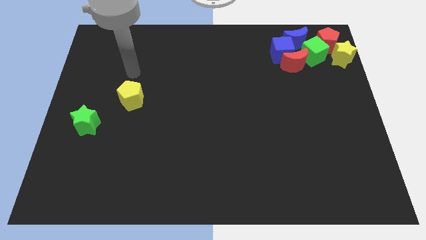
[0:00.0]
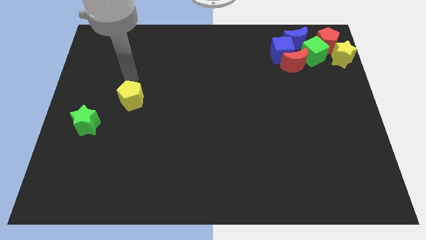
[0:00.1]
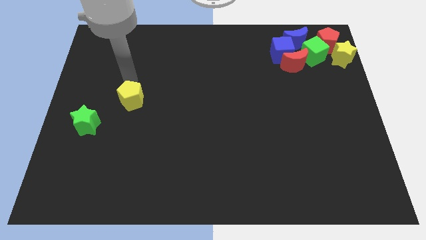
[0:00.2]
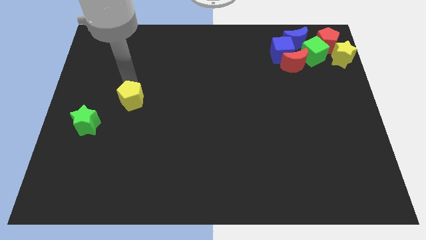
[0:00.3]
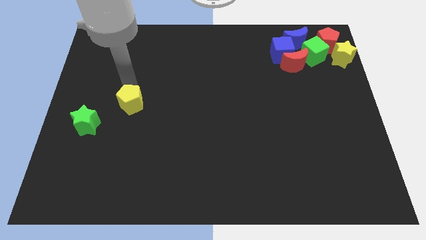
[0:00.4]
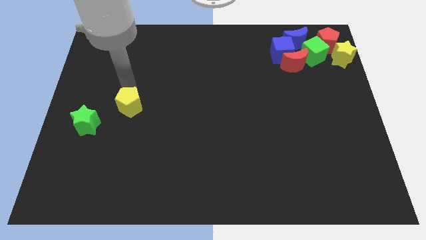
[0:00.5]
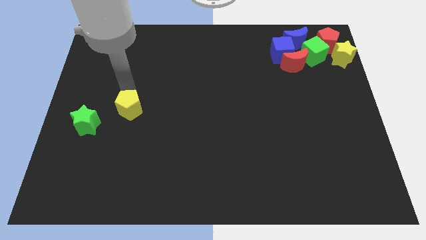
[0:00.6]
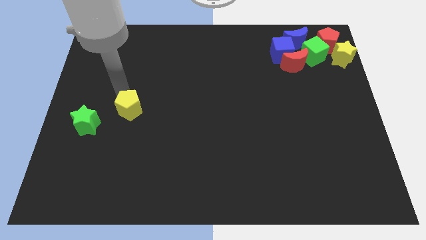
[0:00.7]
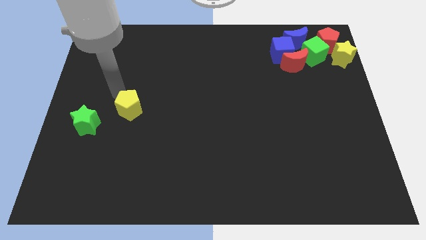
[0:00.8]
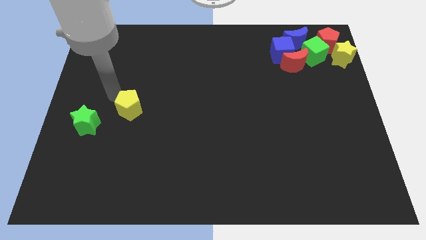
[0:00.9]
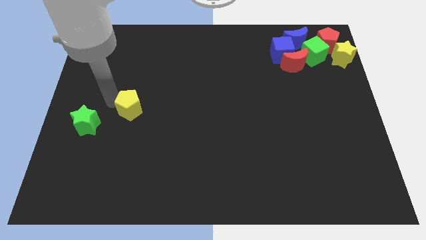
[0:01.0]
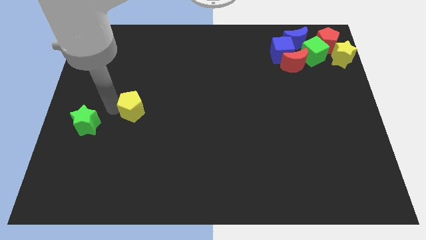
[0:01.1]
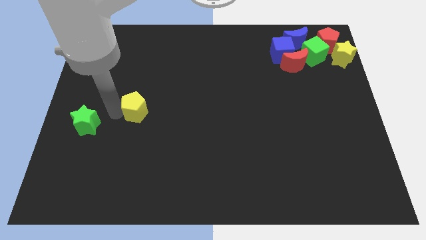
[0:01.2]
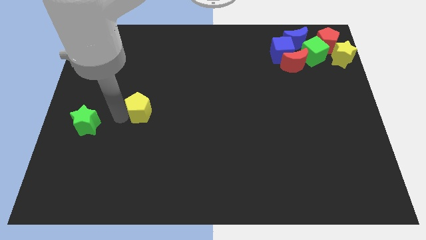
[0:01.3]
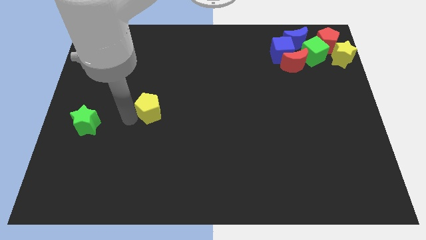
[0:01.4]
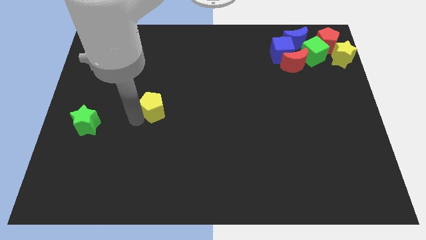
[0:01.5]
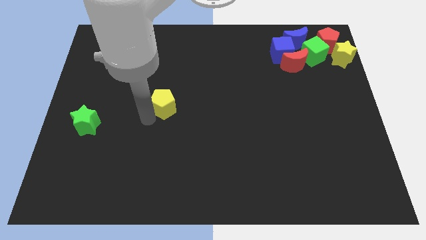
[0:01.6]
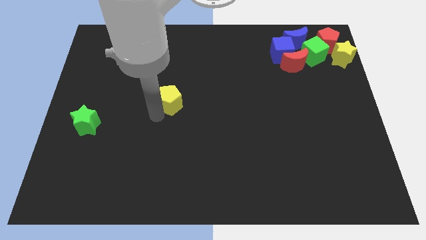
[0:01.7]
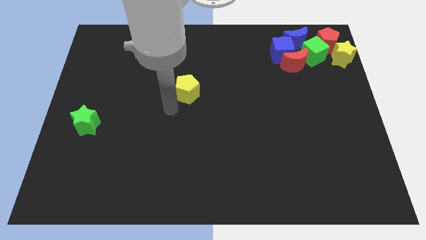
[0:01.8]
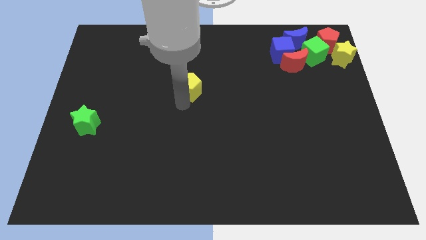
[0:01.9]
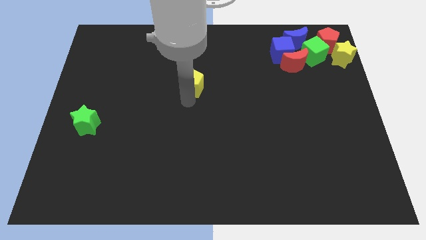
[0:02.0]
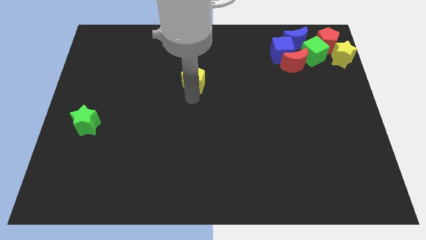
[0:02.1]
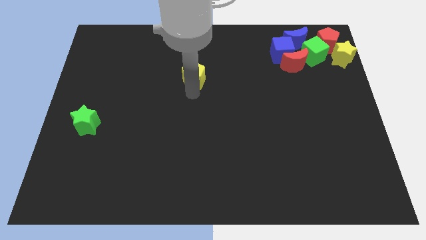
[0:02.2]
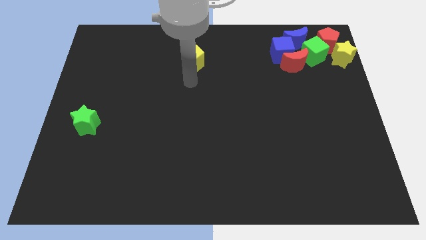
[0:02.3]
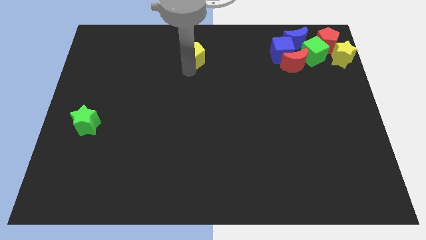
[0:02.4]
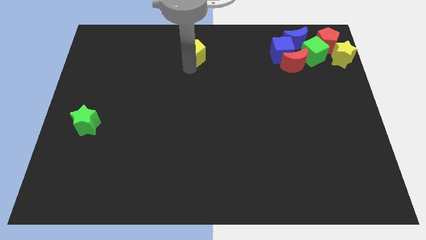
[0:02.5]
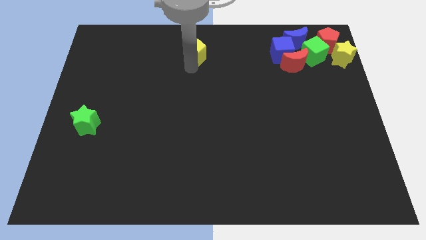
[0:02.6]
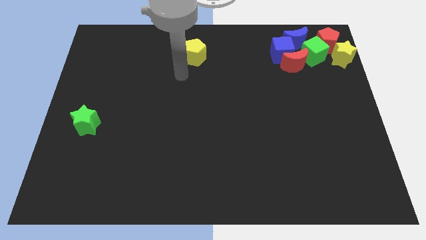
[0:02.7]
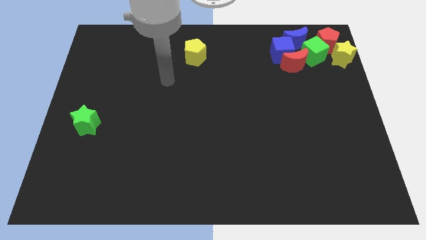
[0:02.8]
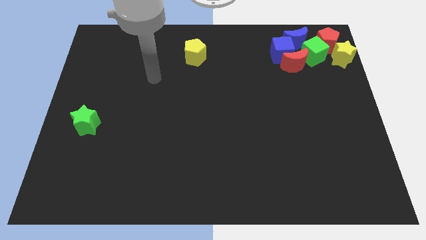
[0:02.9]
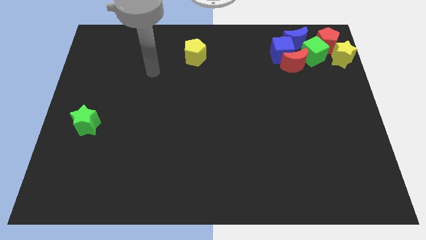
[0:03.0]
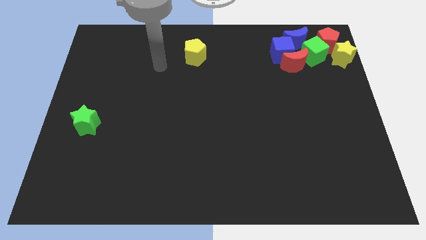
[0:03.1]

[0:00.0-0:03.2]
move the yellow pentagon at the top center of the board

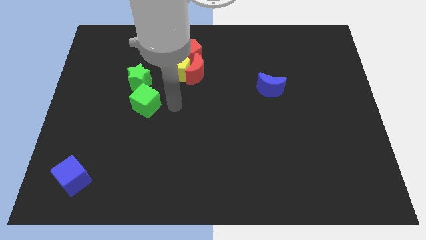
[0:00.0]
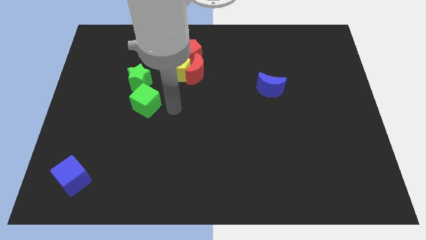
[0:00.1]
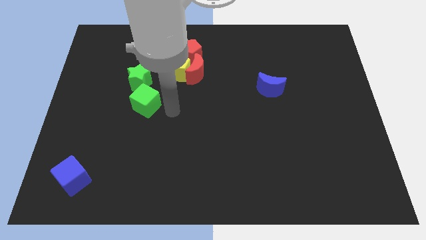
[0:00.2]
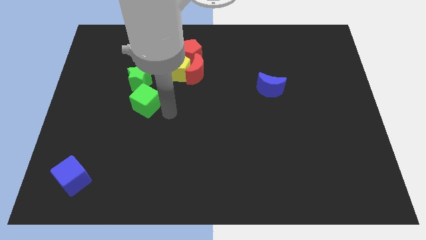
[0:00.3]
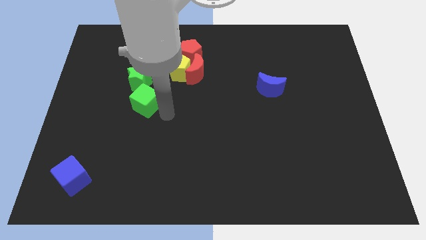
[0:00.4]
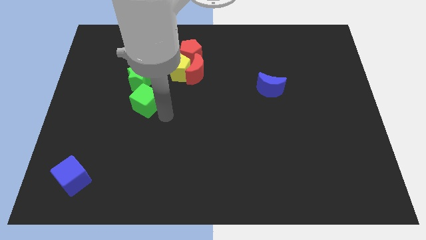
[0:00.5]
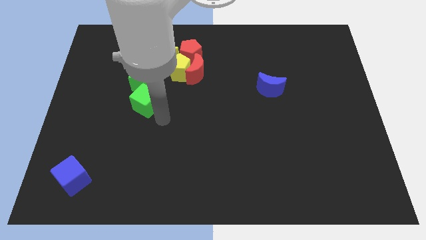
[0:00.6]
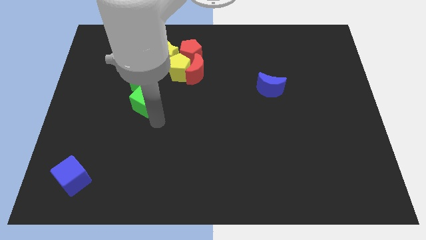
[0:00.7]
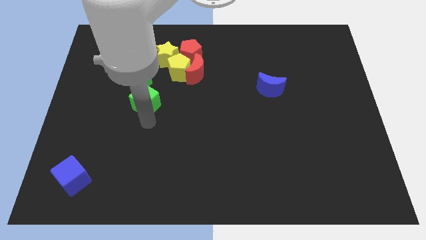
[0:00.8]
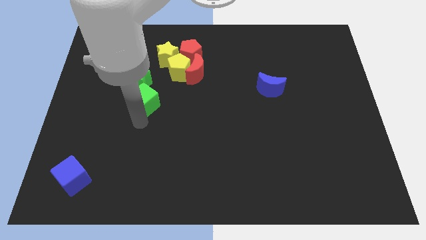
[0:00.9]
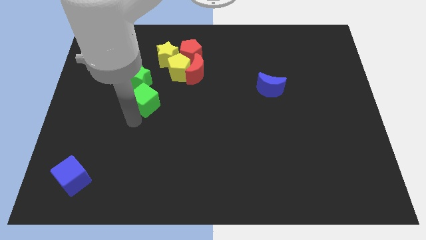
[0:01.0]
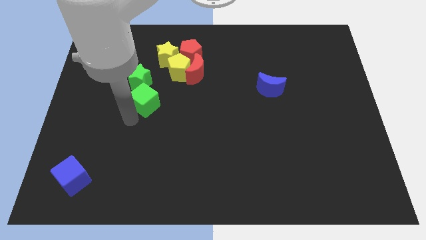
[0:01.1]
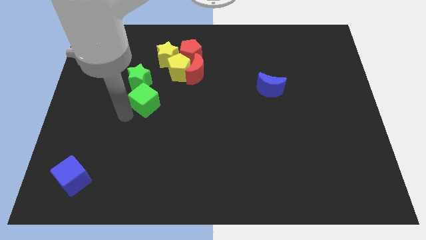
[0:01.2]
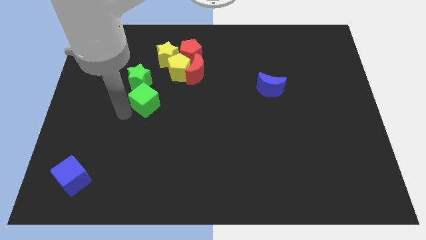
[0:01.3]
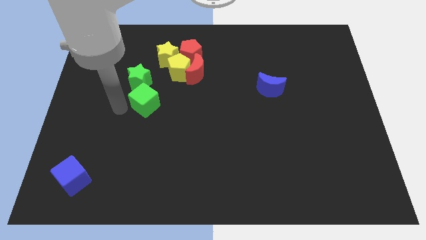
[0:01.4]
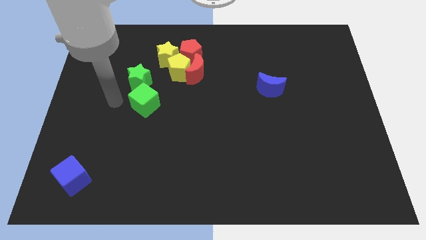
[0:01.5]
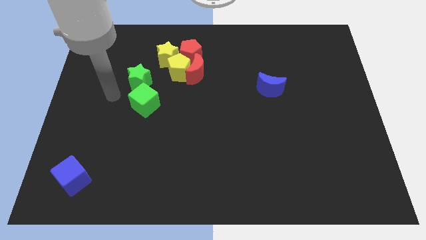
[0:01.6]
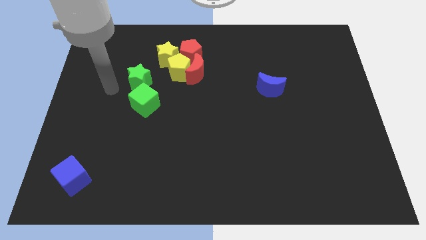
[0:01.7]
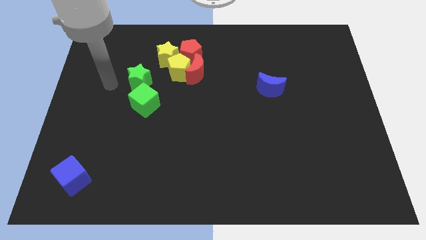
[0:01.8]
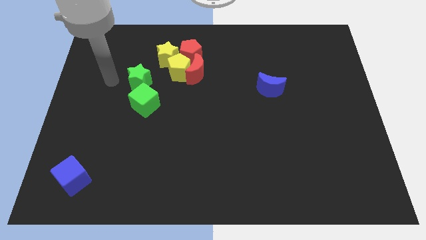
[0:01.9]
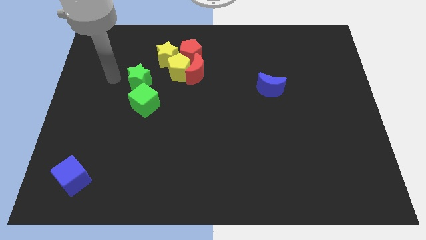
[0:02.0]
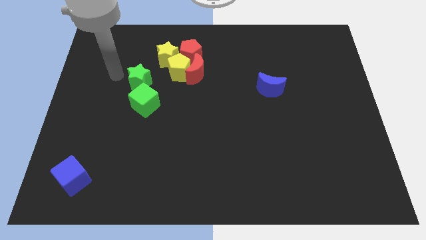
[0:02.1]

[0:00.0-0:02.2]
put your hand to the left of the green star

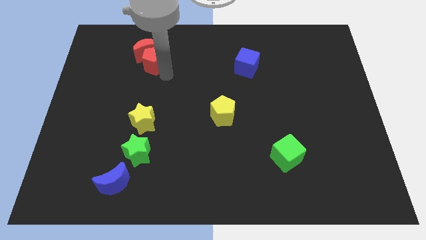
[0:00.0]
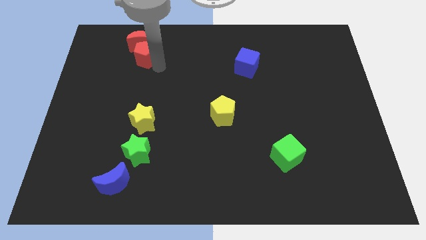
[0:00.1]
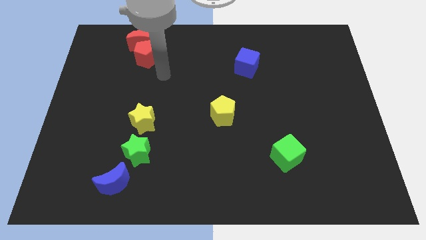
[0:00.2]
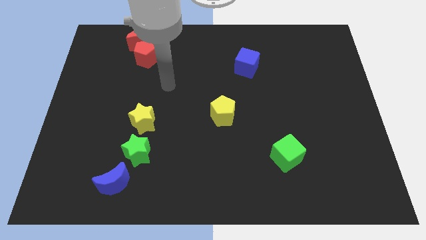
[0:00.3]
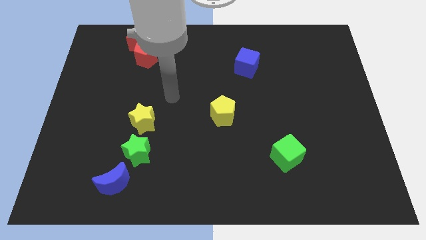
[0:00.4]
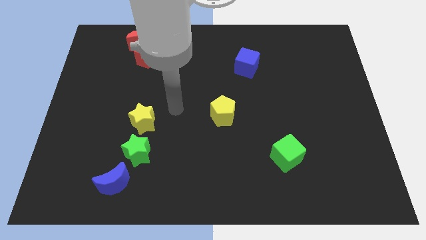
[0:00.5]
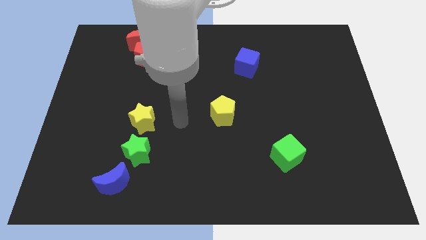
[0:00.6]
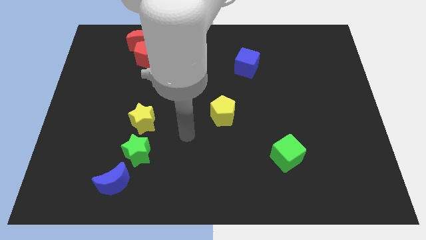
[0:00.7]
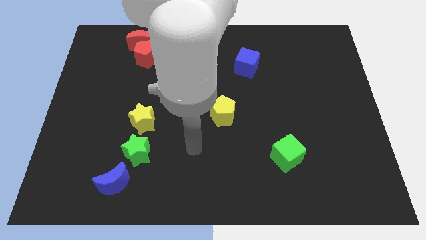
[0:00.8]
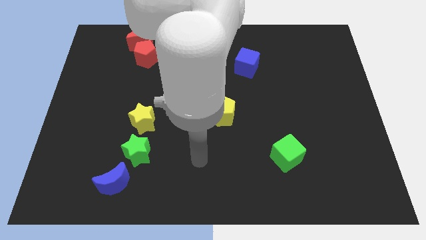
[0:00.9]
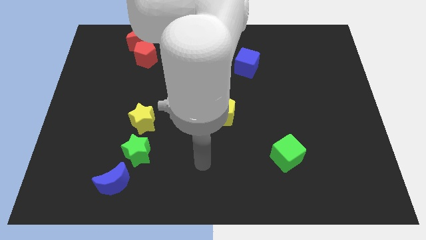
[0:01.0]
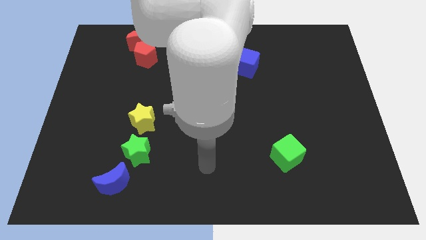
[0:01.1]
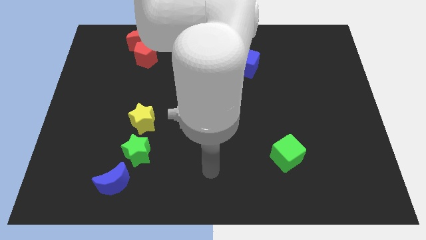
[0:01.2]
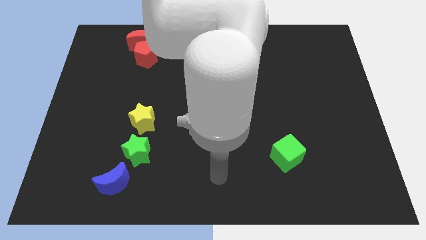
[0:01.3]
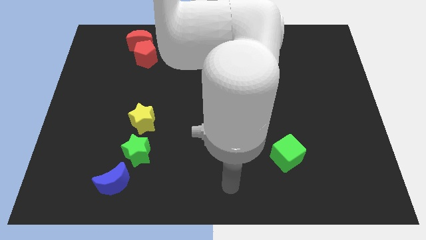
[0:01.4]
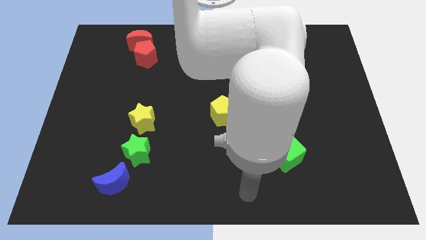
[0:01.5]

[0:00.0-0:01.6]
move the arm to the bottom middle of the board

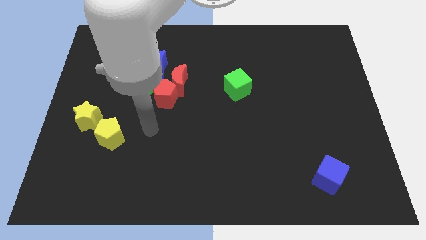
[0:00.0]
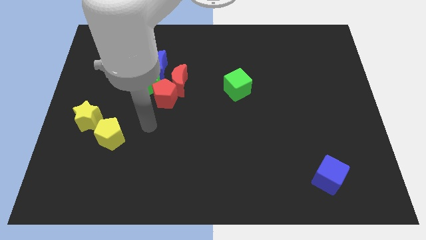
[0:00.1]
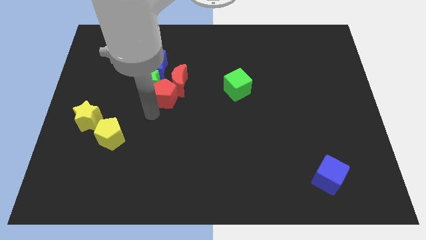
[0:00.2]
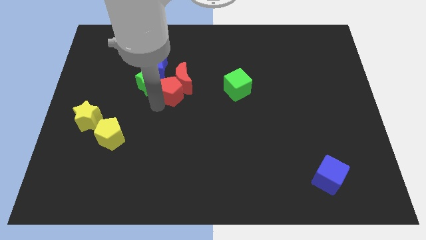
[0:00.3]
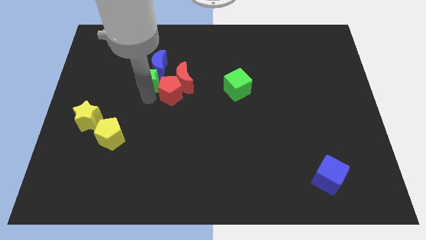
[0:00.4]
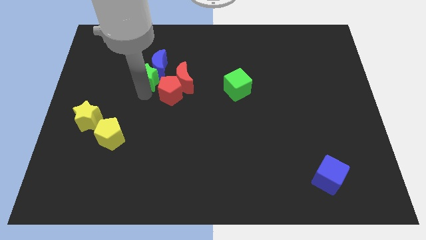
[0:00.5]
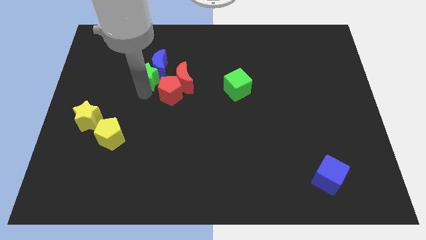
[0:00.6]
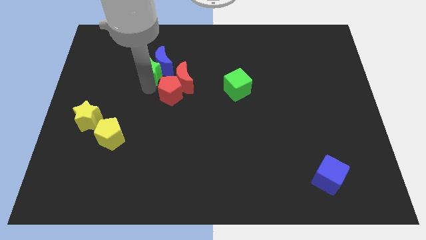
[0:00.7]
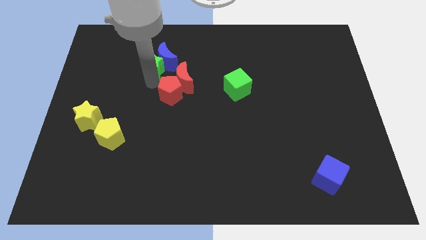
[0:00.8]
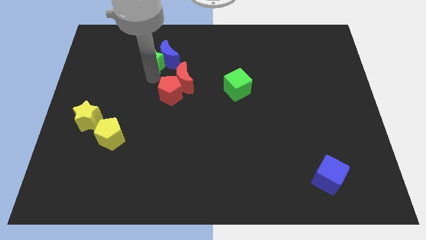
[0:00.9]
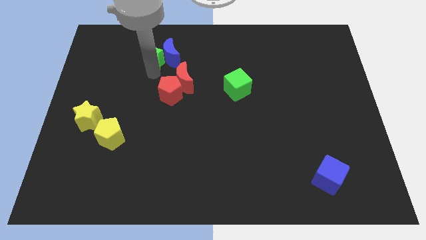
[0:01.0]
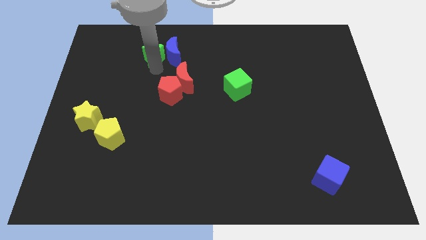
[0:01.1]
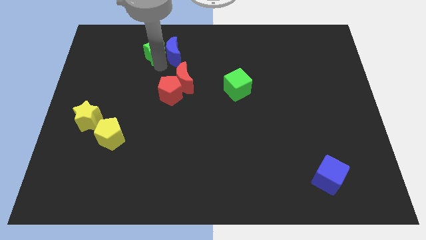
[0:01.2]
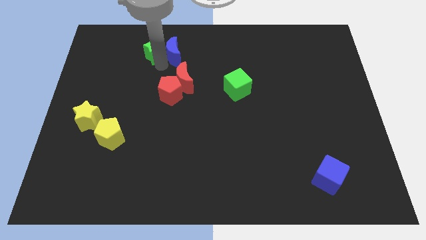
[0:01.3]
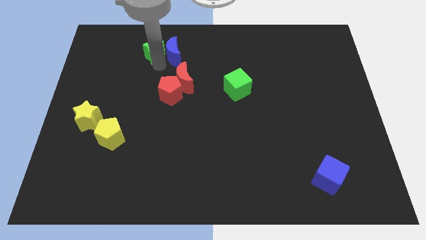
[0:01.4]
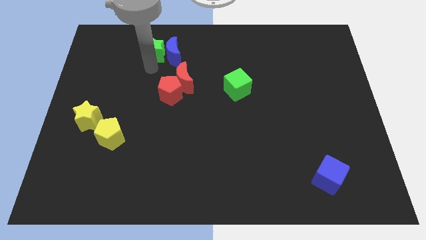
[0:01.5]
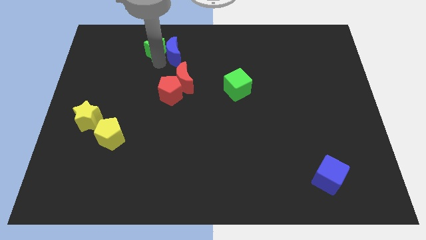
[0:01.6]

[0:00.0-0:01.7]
move the green star to the left side of the blue crescent

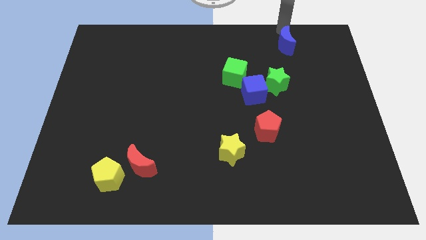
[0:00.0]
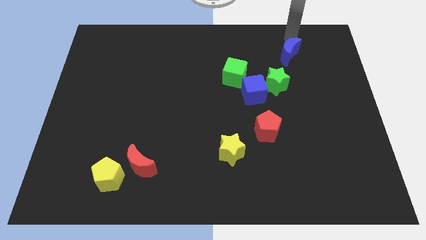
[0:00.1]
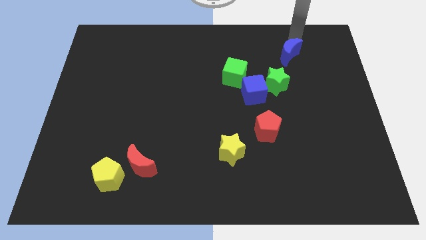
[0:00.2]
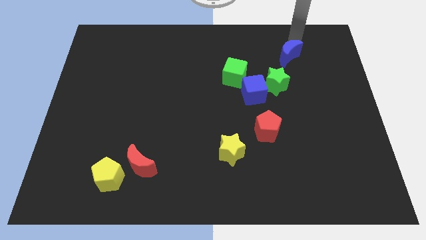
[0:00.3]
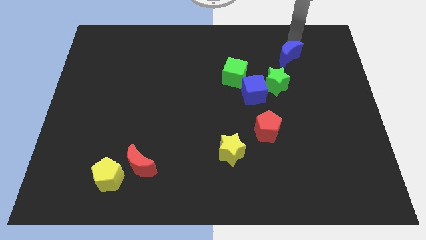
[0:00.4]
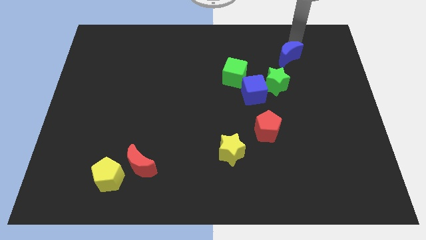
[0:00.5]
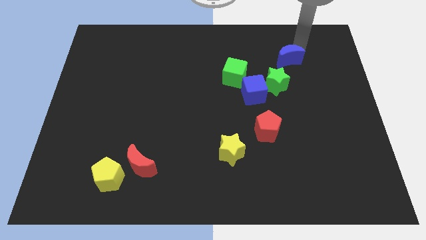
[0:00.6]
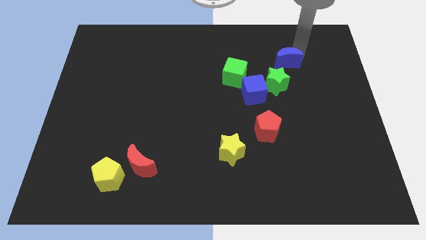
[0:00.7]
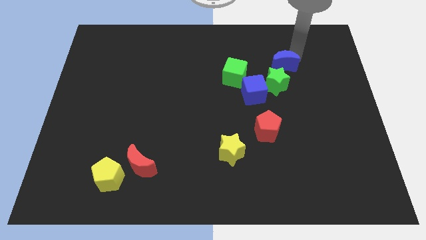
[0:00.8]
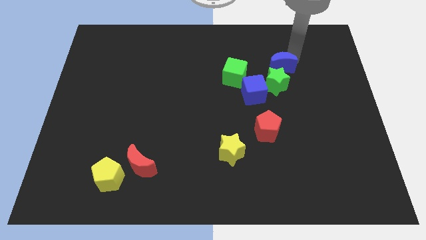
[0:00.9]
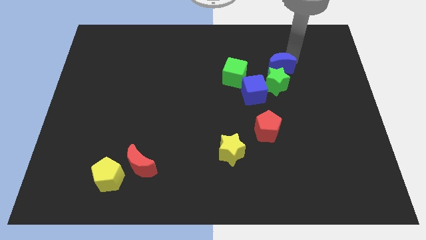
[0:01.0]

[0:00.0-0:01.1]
move blue moon into green star
